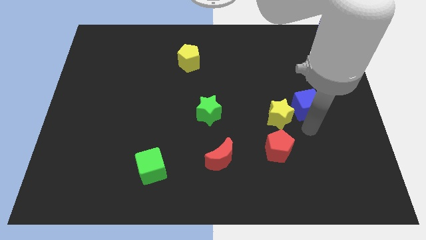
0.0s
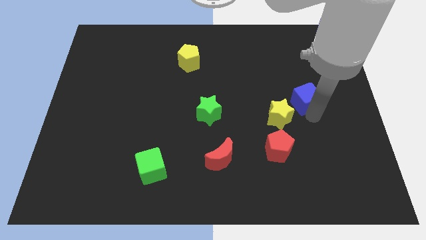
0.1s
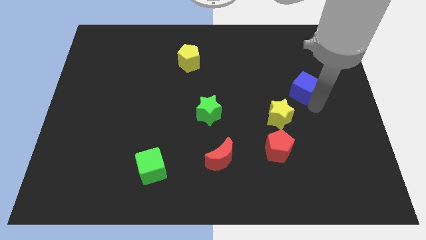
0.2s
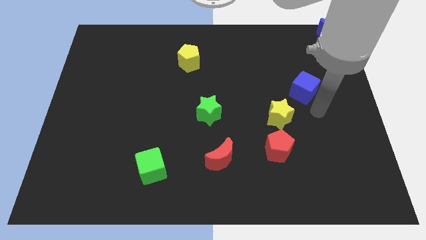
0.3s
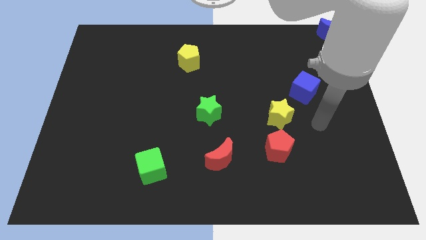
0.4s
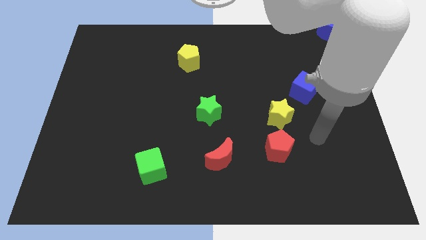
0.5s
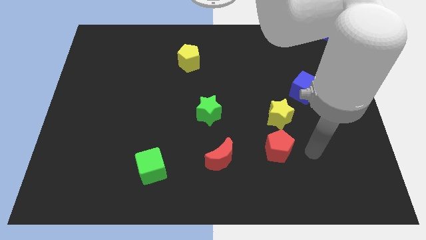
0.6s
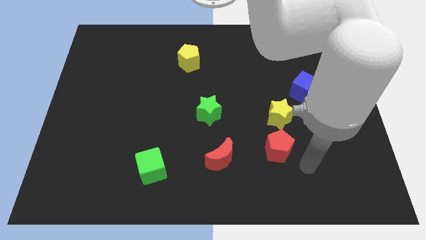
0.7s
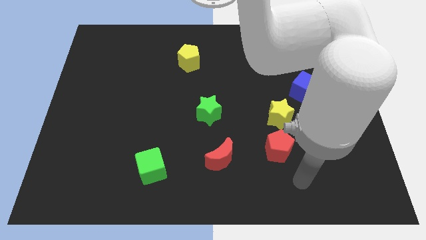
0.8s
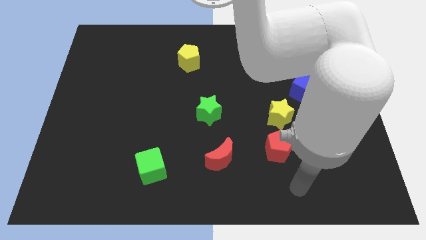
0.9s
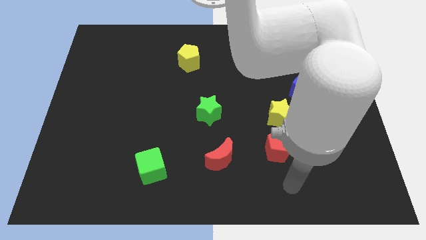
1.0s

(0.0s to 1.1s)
move blue cube slightly up

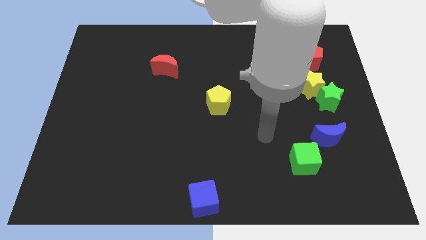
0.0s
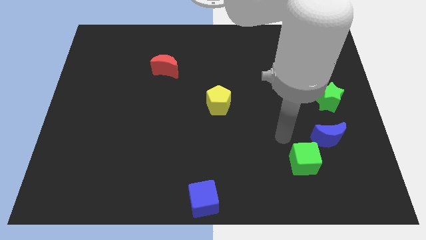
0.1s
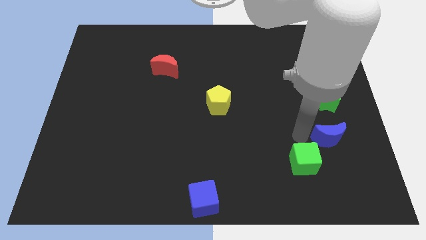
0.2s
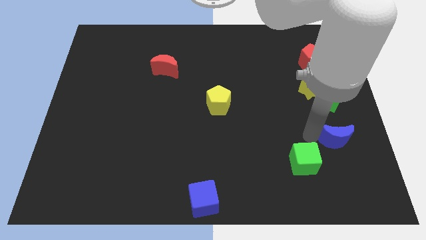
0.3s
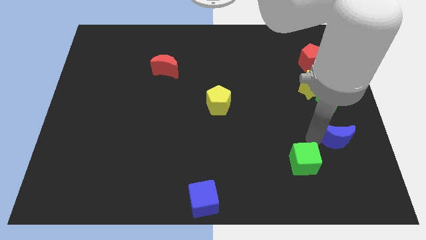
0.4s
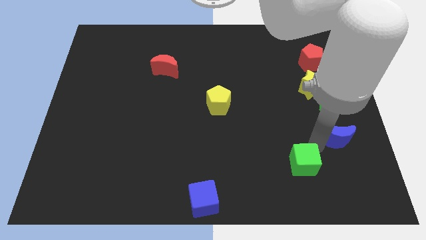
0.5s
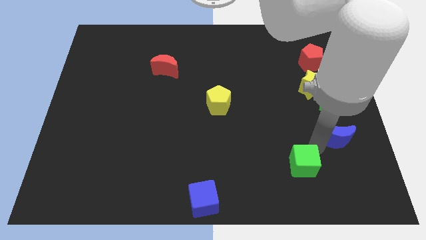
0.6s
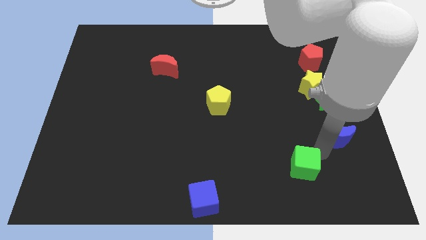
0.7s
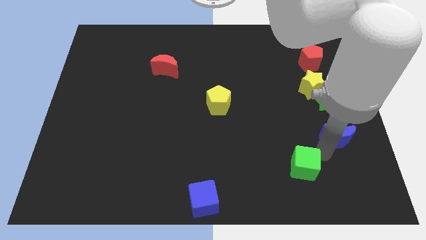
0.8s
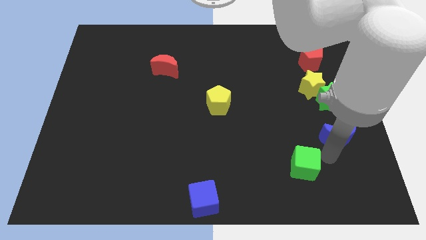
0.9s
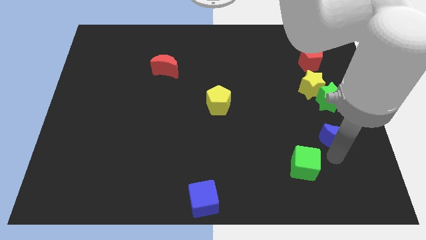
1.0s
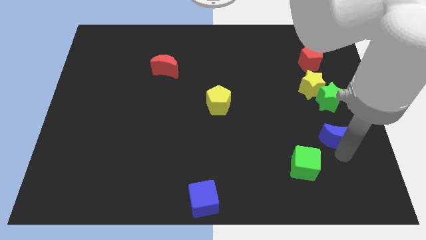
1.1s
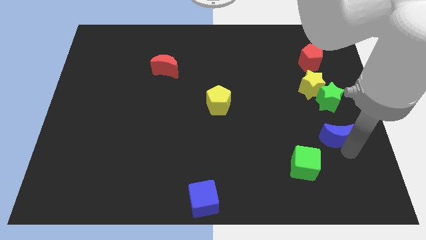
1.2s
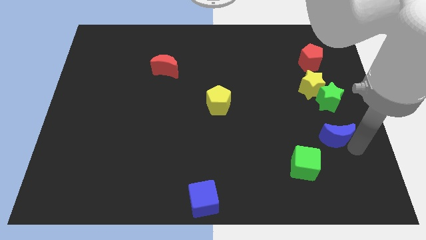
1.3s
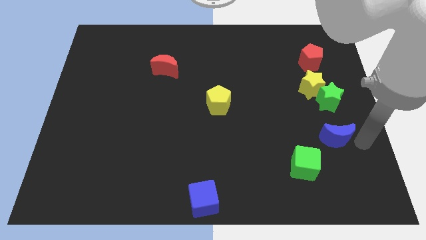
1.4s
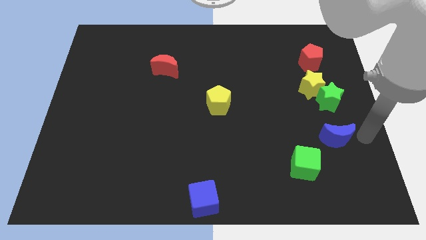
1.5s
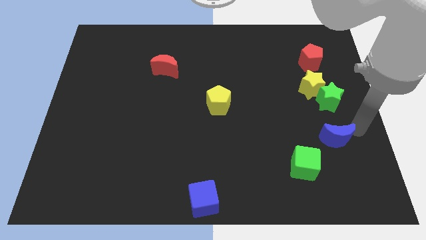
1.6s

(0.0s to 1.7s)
separate the blue crescent from green cube

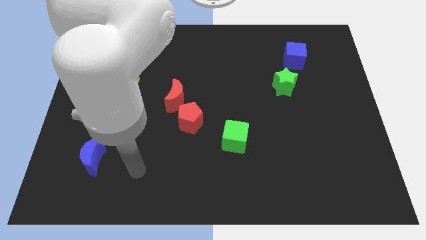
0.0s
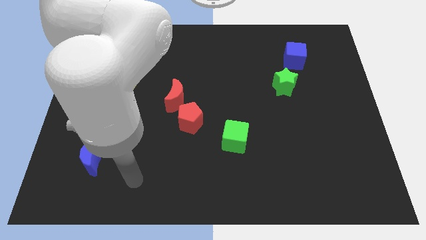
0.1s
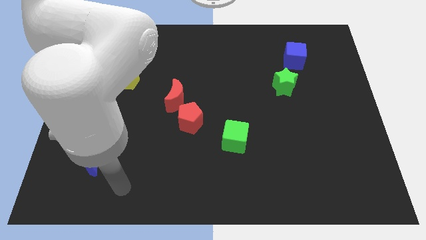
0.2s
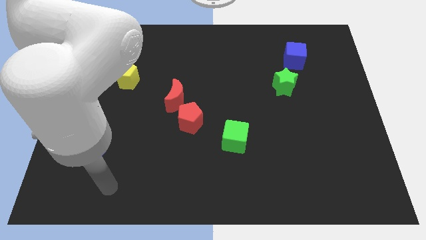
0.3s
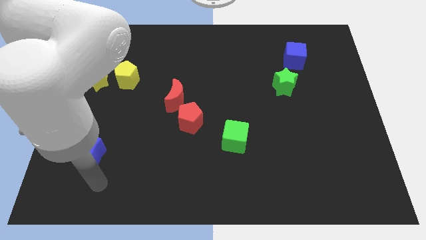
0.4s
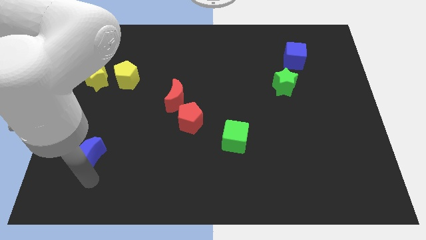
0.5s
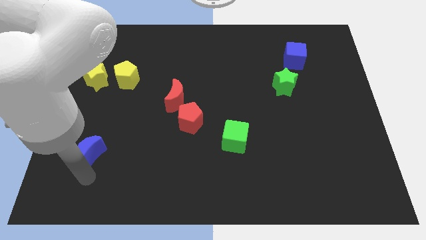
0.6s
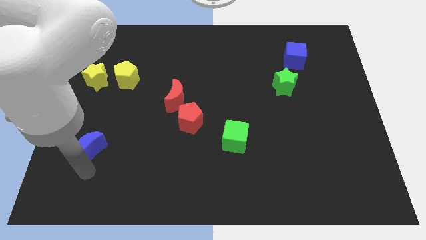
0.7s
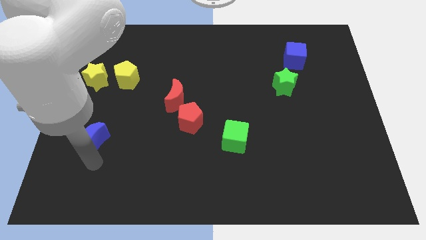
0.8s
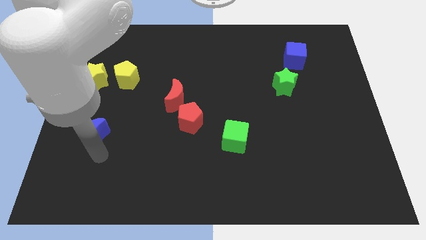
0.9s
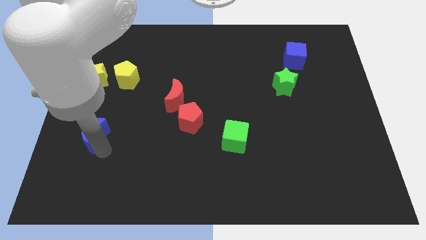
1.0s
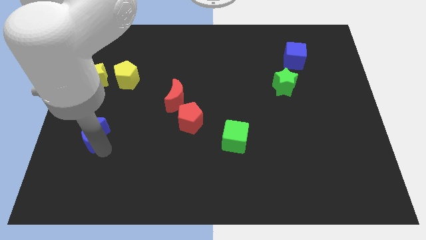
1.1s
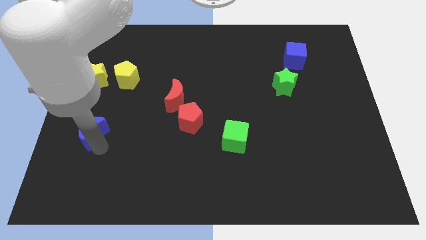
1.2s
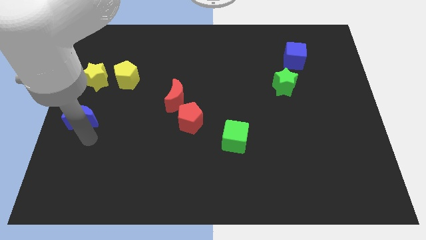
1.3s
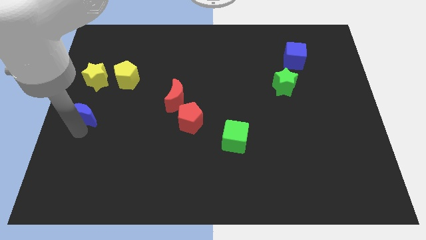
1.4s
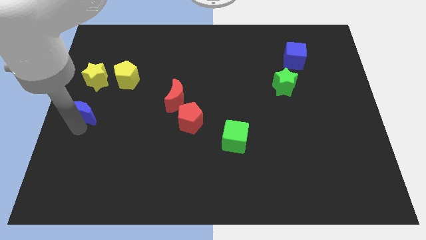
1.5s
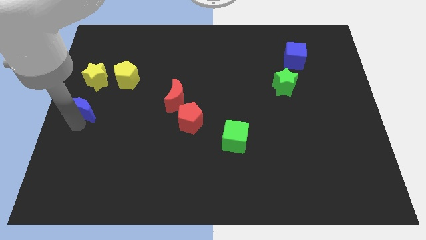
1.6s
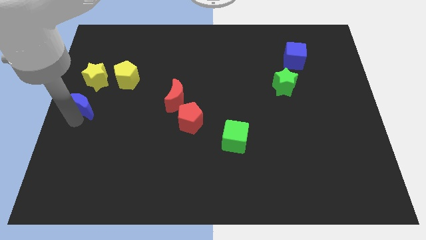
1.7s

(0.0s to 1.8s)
slide the blue moon to the center left corner of the board

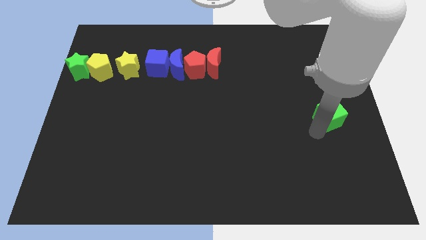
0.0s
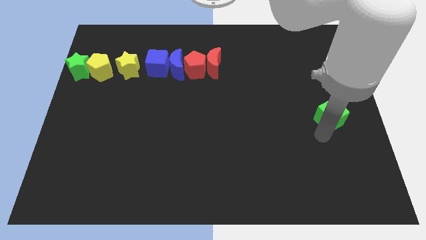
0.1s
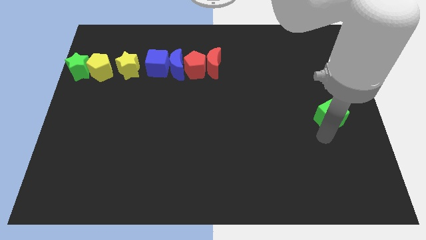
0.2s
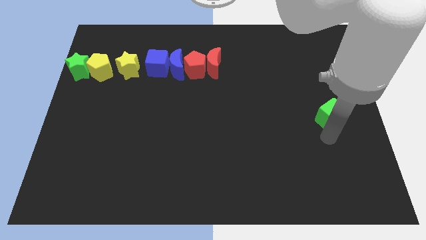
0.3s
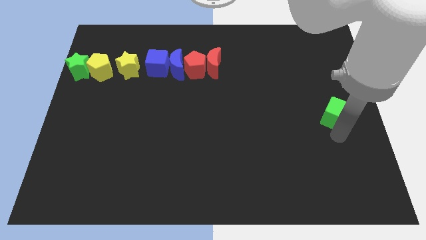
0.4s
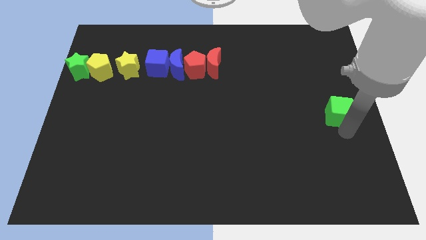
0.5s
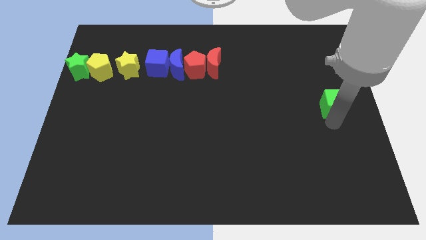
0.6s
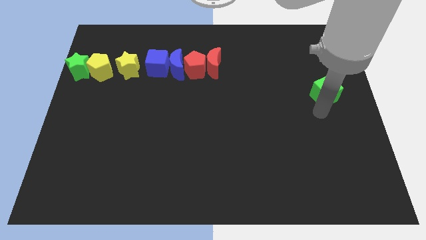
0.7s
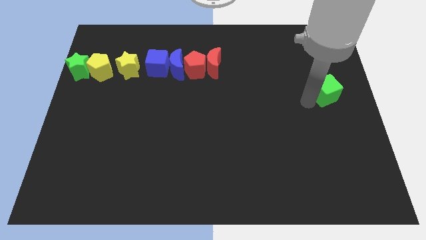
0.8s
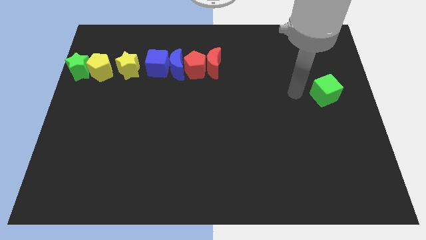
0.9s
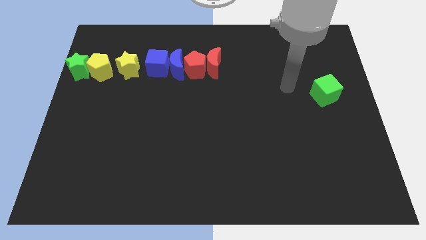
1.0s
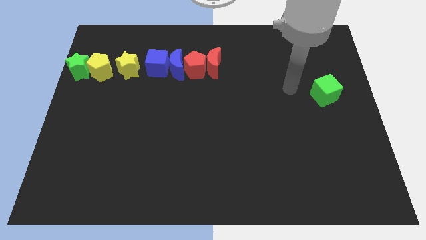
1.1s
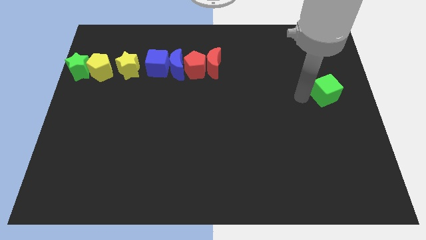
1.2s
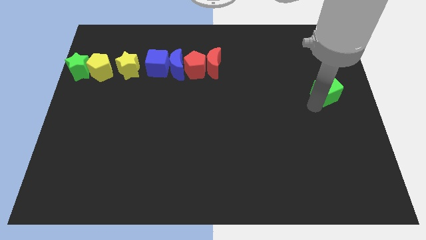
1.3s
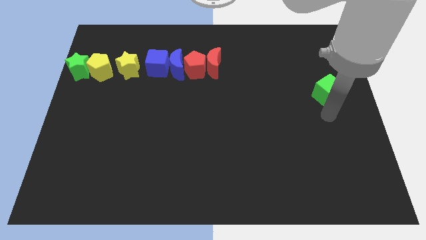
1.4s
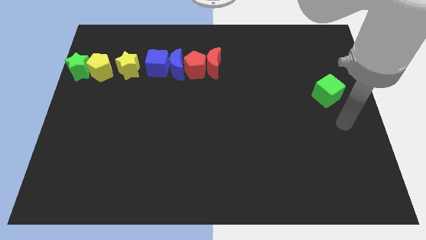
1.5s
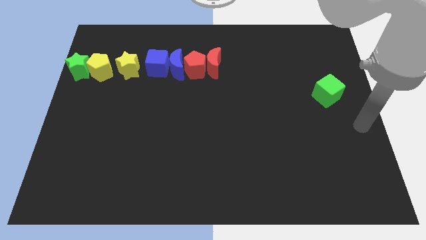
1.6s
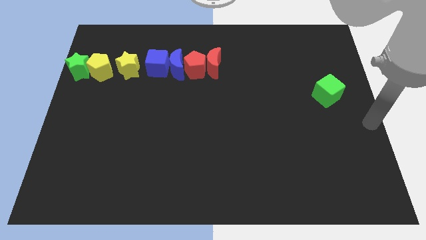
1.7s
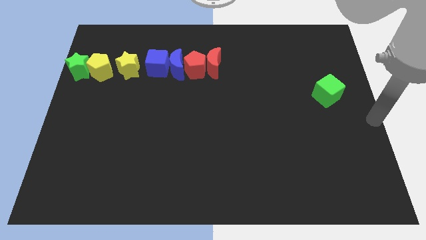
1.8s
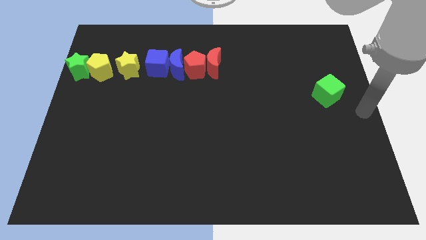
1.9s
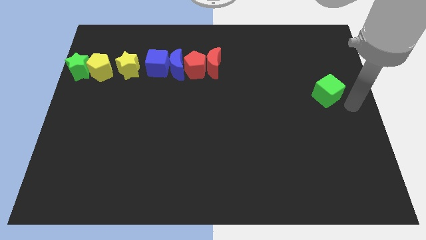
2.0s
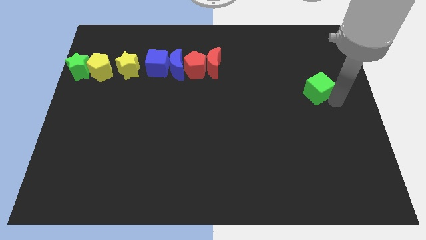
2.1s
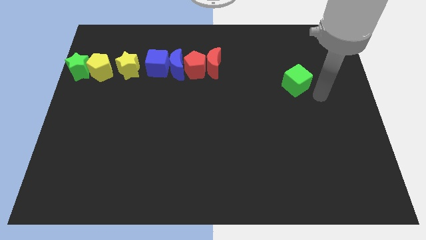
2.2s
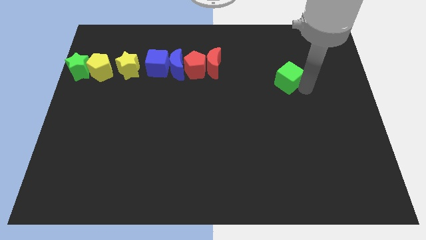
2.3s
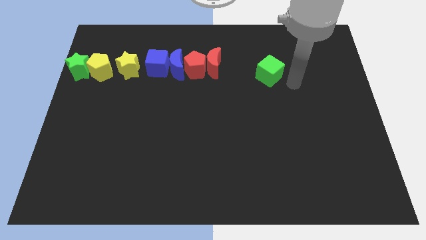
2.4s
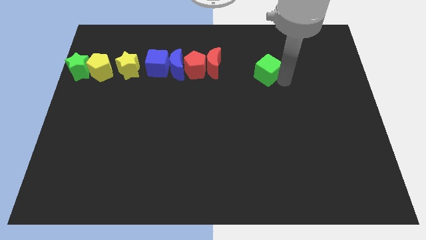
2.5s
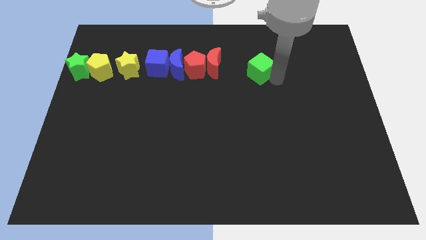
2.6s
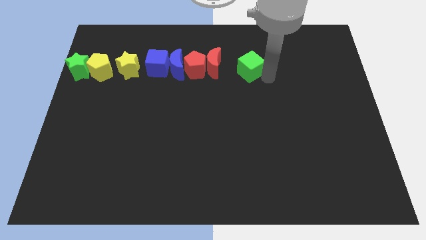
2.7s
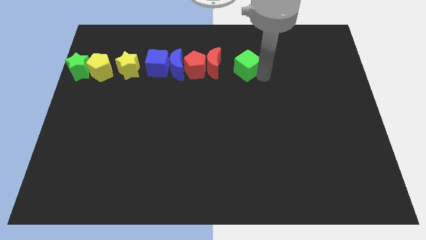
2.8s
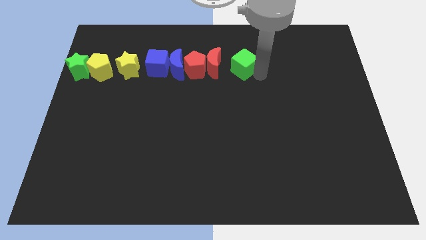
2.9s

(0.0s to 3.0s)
move the green cube to the right of the red crescent

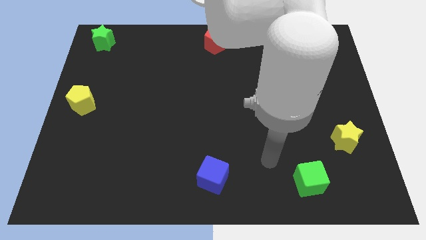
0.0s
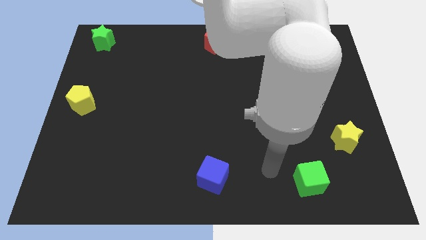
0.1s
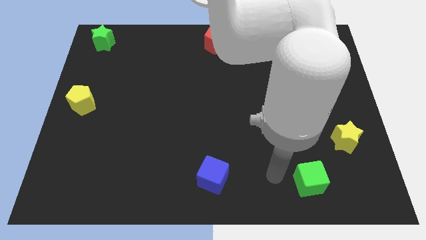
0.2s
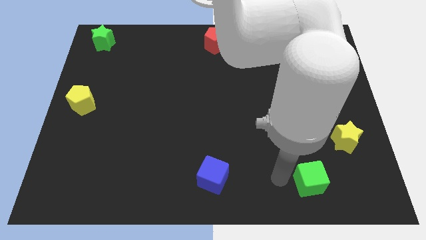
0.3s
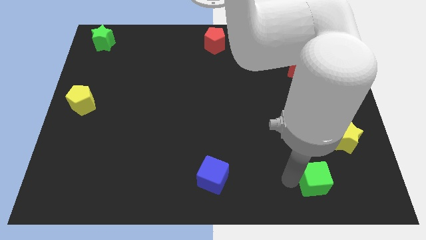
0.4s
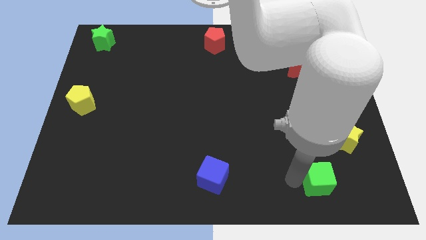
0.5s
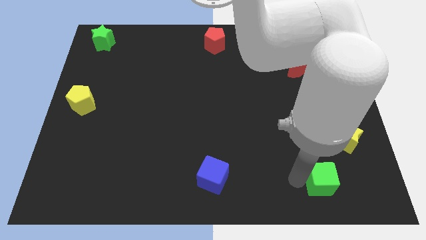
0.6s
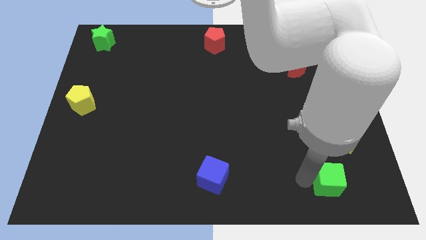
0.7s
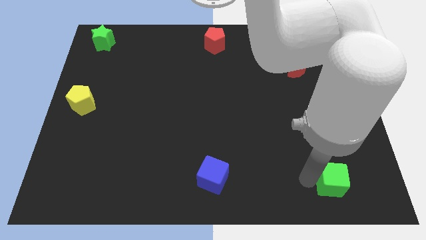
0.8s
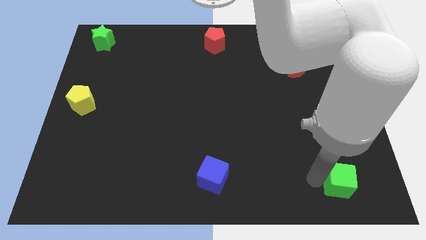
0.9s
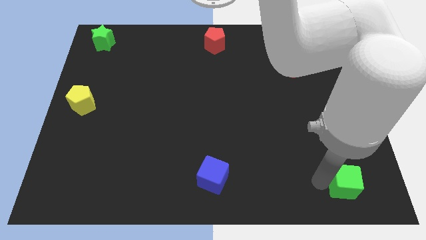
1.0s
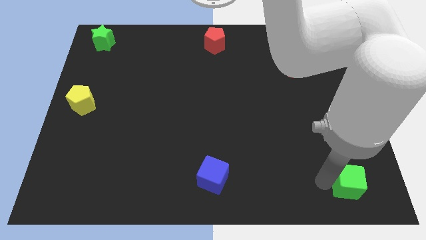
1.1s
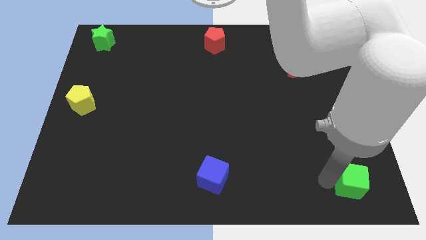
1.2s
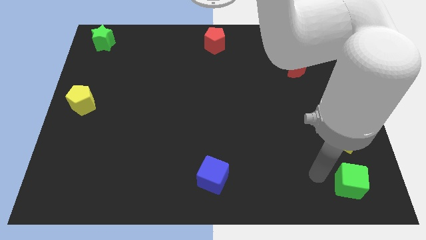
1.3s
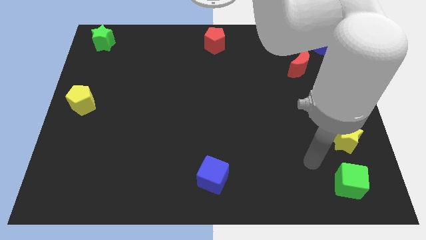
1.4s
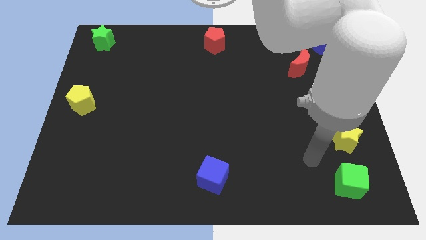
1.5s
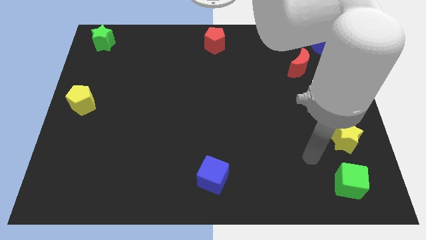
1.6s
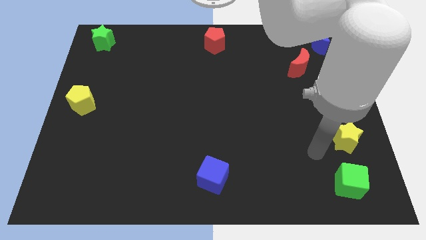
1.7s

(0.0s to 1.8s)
place the green cube below the yellow star
